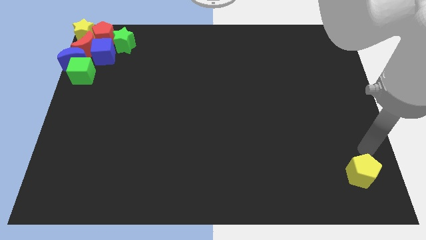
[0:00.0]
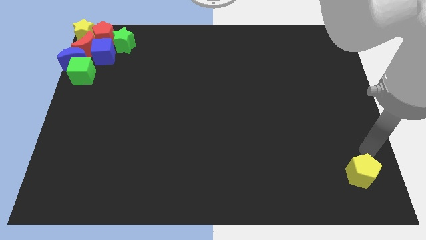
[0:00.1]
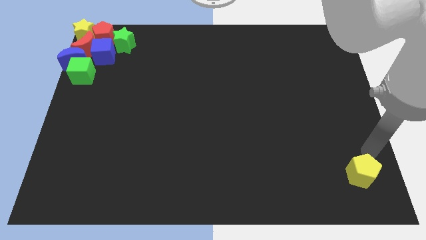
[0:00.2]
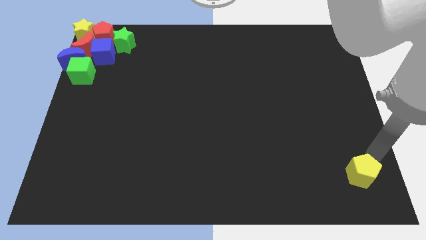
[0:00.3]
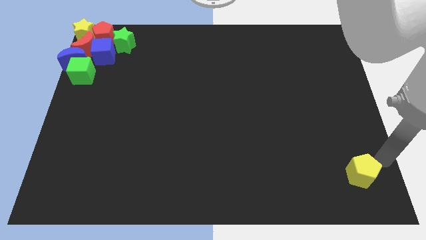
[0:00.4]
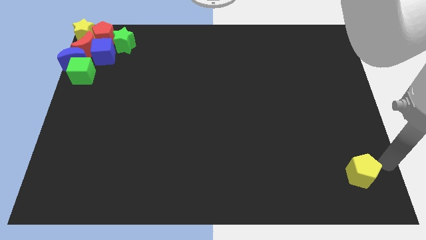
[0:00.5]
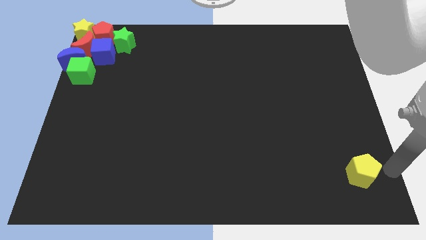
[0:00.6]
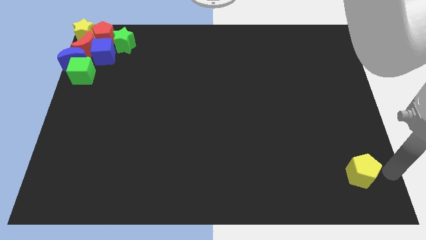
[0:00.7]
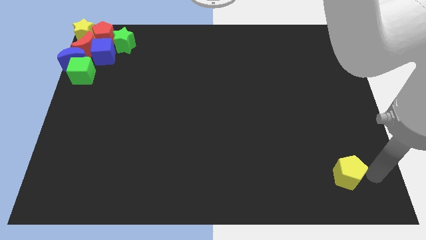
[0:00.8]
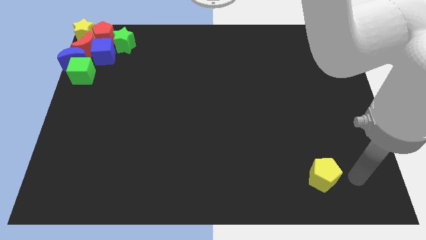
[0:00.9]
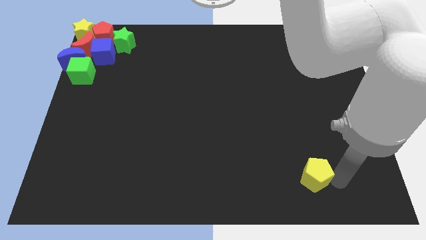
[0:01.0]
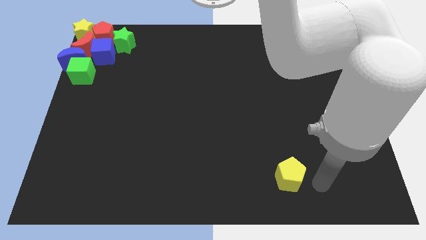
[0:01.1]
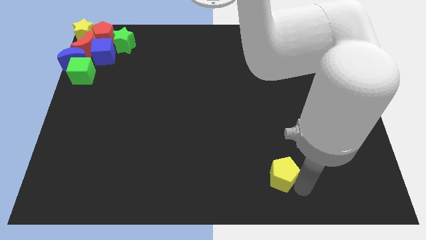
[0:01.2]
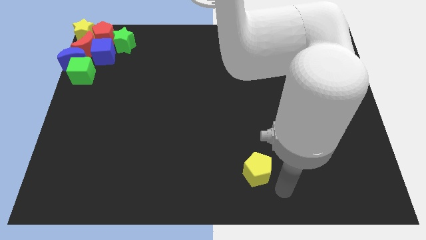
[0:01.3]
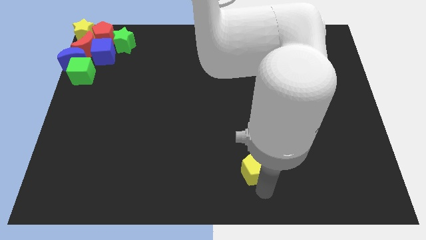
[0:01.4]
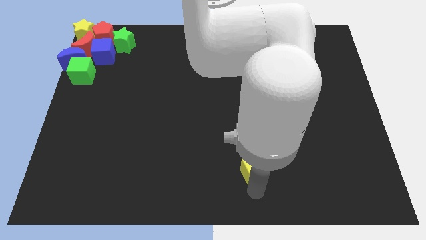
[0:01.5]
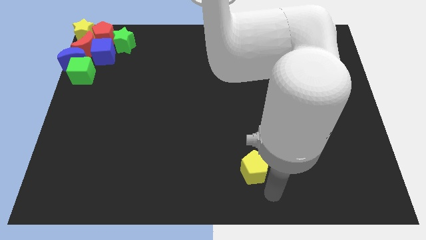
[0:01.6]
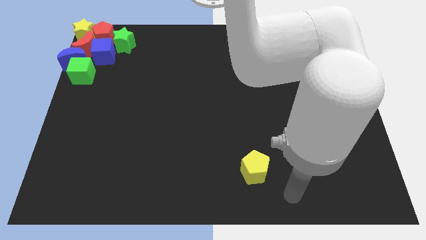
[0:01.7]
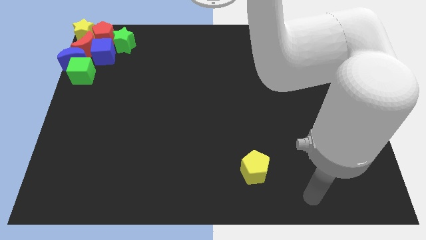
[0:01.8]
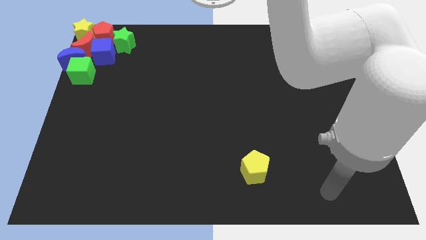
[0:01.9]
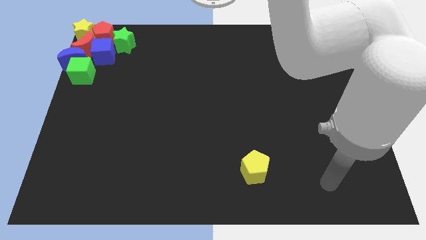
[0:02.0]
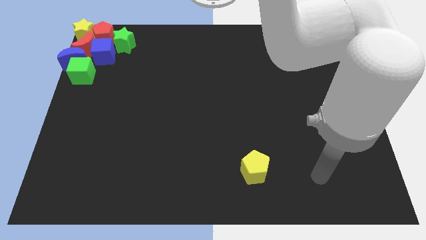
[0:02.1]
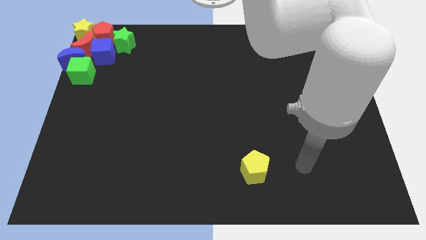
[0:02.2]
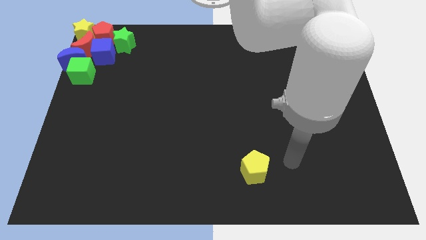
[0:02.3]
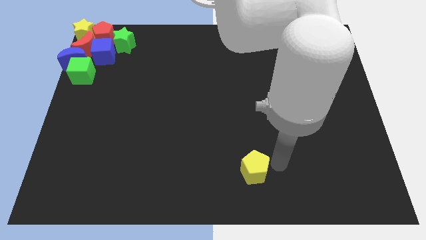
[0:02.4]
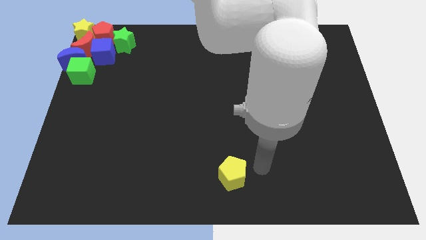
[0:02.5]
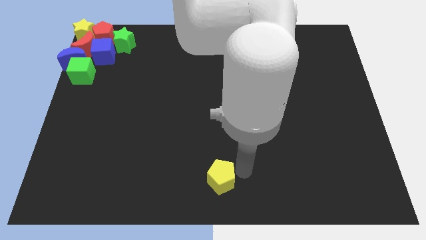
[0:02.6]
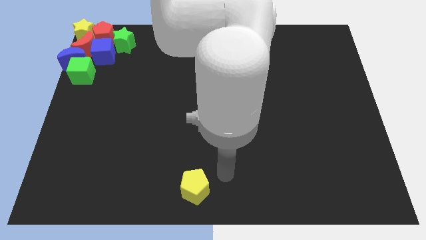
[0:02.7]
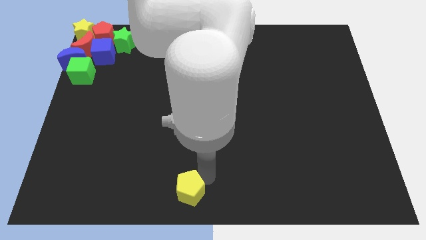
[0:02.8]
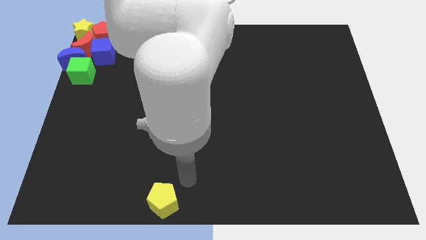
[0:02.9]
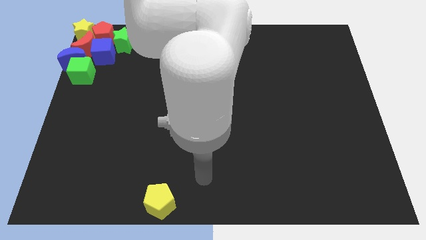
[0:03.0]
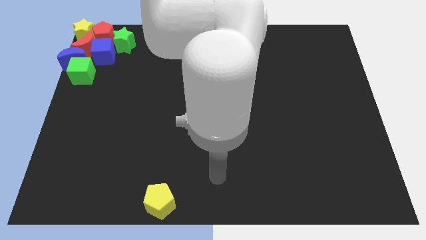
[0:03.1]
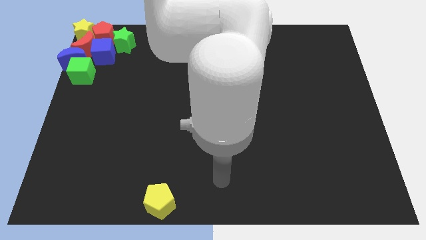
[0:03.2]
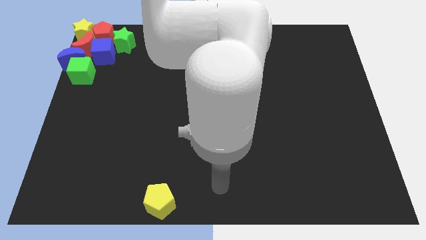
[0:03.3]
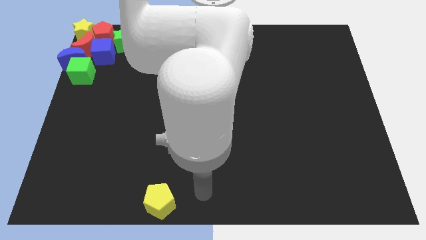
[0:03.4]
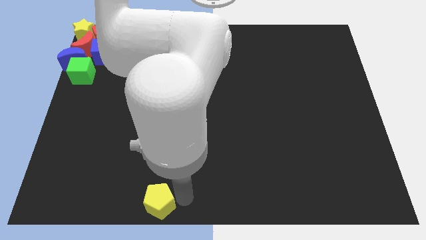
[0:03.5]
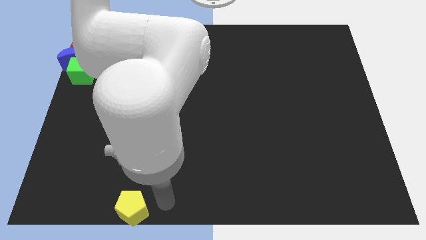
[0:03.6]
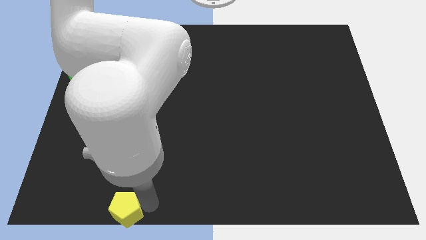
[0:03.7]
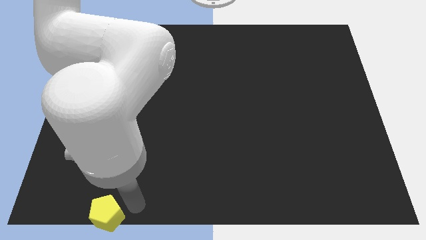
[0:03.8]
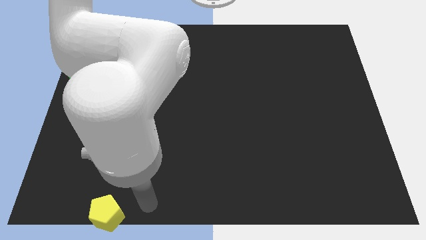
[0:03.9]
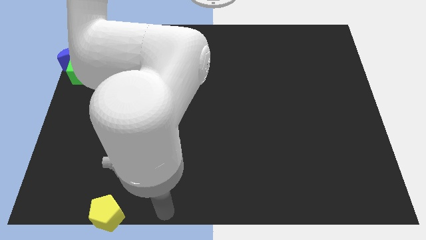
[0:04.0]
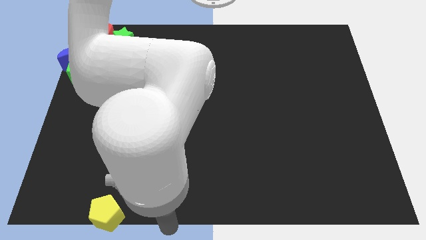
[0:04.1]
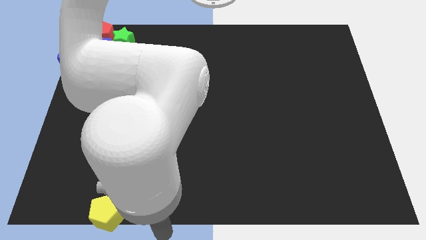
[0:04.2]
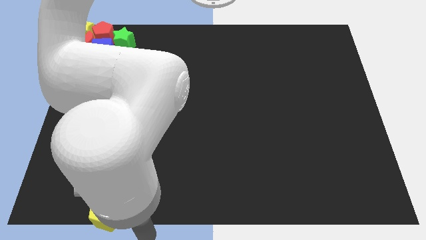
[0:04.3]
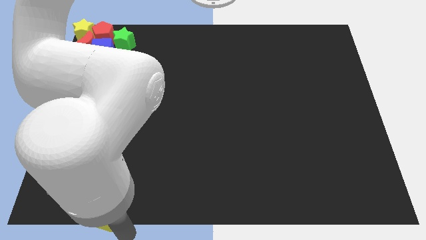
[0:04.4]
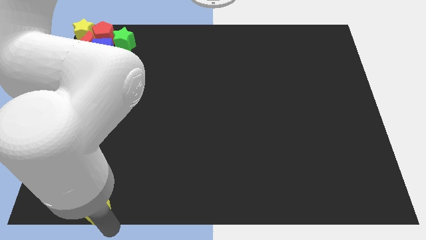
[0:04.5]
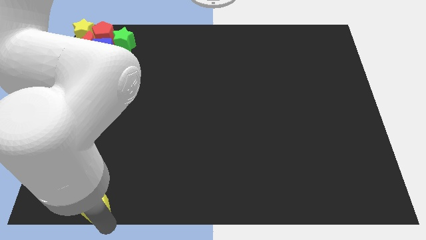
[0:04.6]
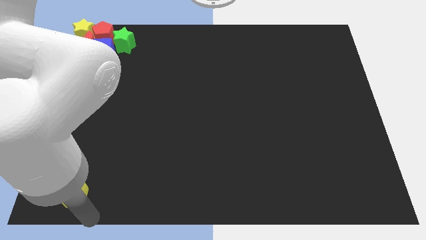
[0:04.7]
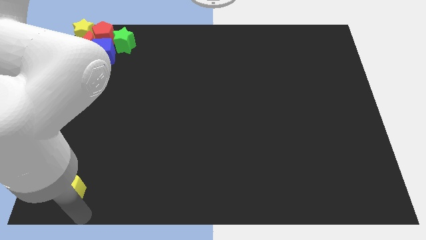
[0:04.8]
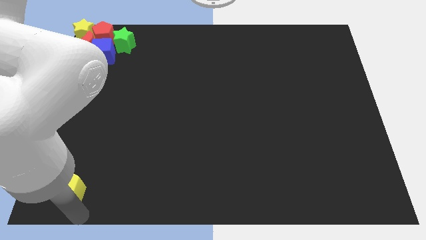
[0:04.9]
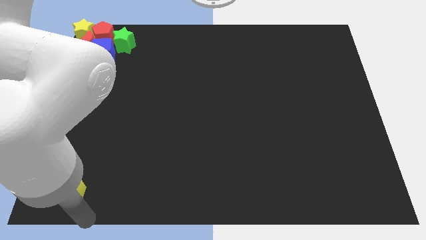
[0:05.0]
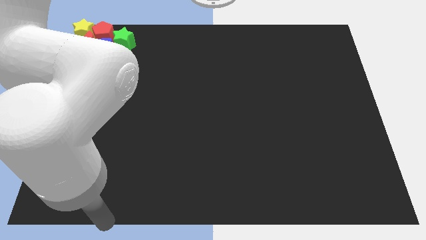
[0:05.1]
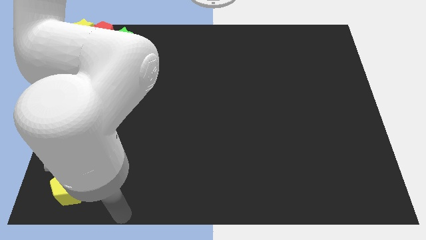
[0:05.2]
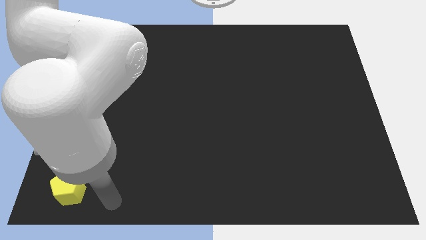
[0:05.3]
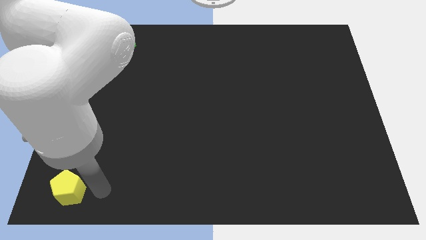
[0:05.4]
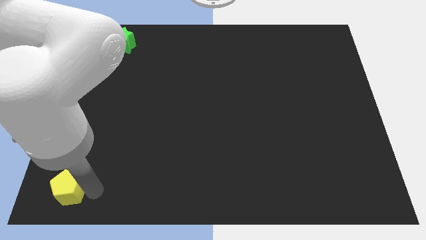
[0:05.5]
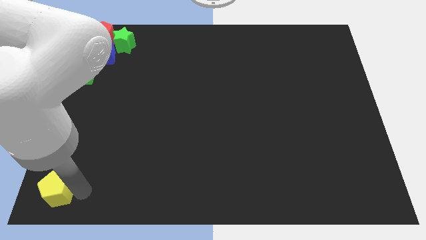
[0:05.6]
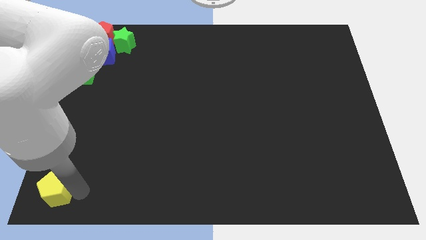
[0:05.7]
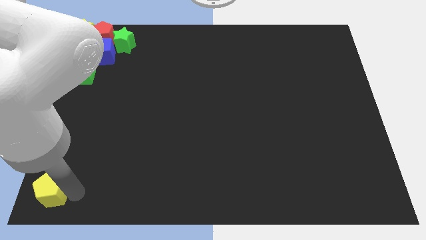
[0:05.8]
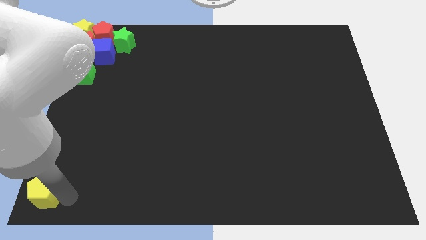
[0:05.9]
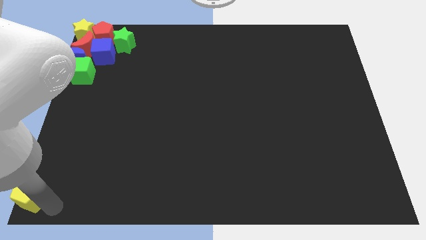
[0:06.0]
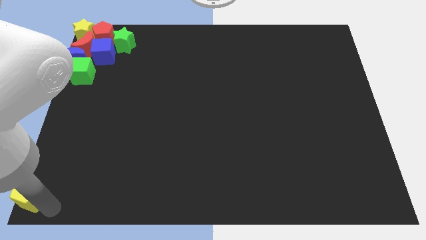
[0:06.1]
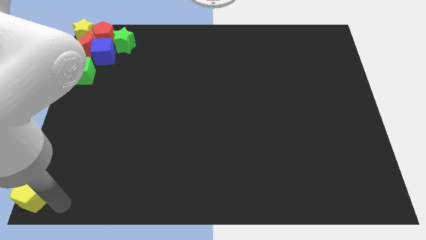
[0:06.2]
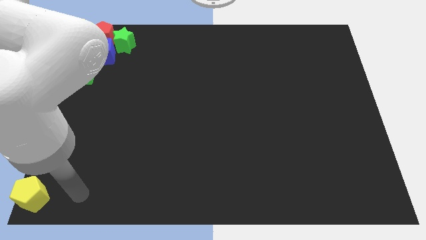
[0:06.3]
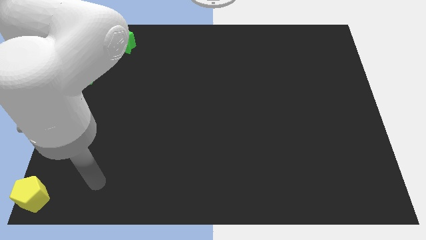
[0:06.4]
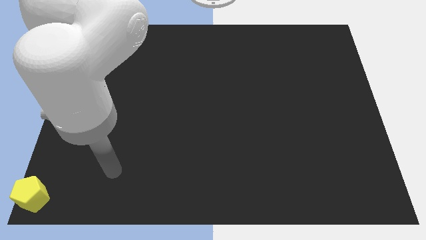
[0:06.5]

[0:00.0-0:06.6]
place the pentagon at the bottom left corner of the board

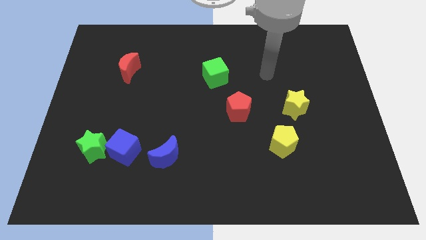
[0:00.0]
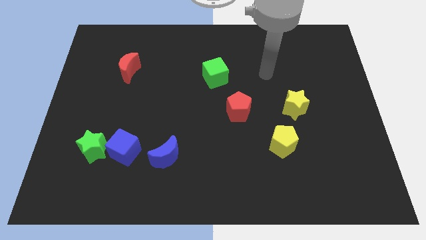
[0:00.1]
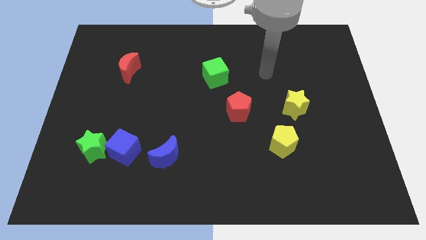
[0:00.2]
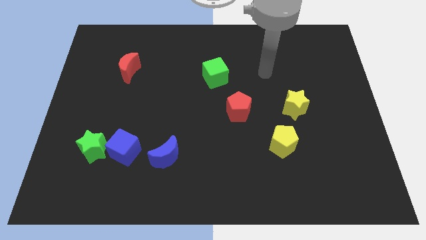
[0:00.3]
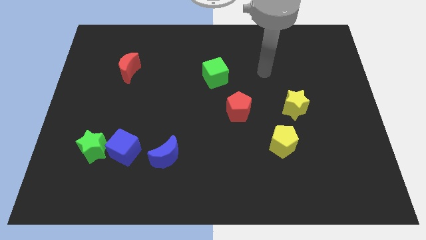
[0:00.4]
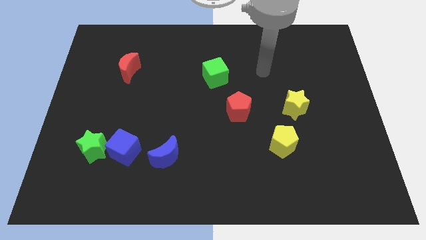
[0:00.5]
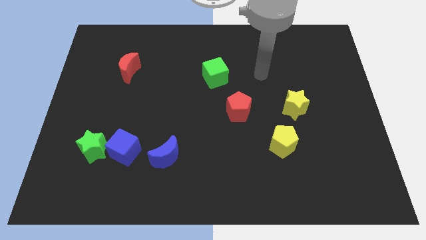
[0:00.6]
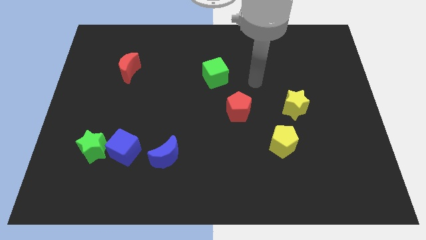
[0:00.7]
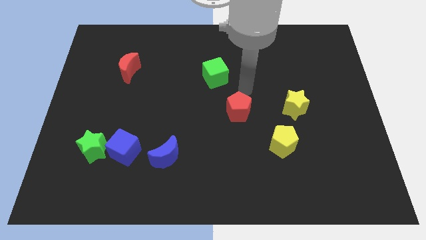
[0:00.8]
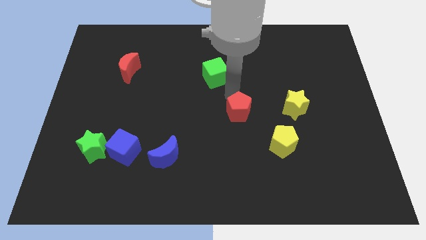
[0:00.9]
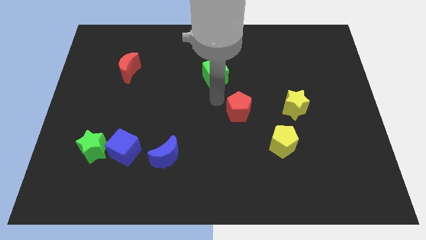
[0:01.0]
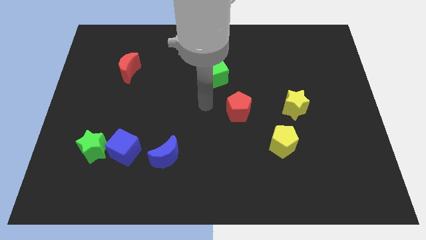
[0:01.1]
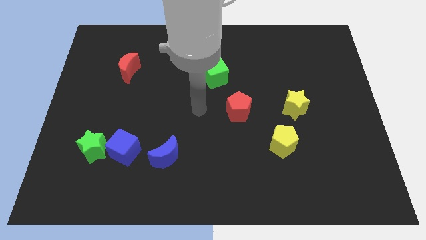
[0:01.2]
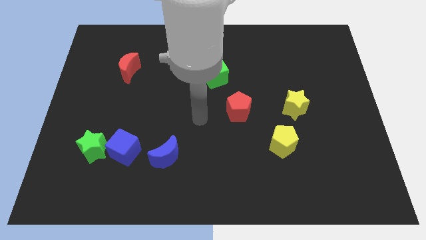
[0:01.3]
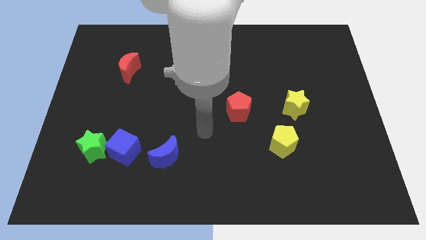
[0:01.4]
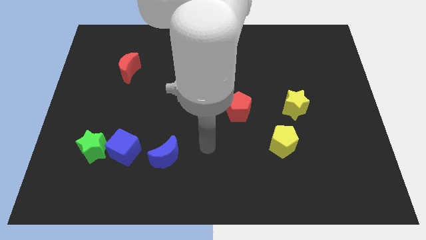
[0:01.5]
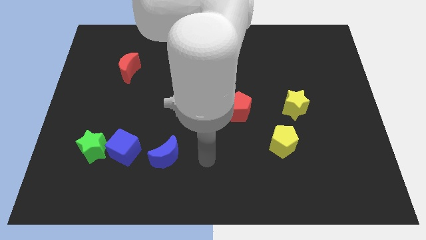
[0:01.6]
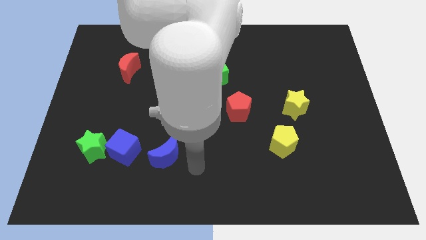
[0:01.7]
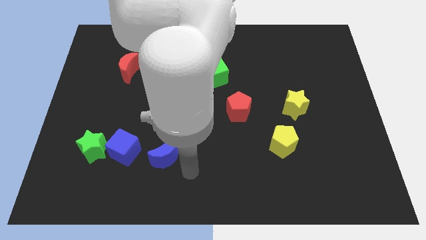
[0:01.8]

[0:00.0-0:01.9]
place the arm diagonally to the blue cube

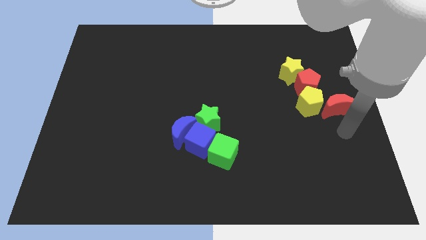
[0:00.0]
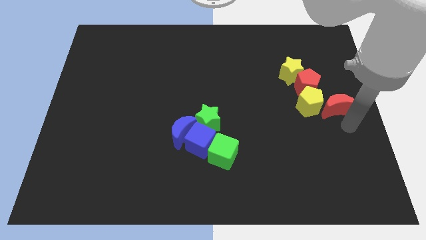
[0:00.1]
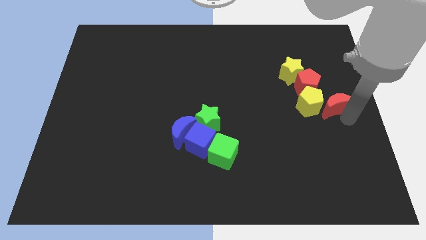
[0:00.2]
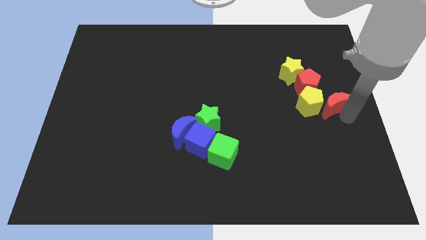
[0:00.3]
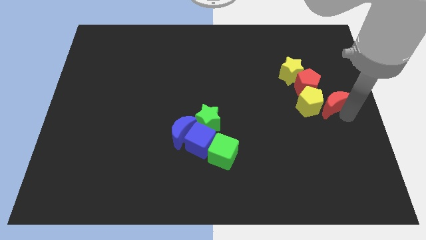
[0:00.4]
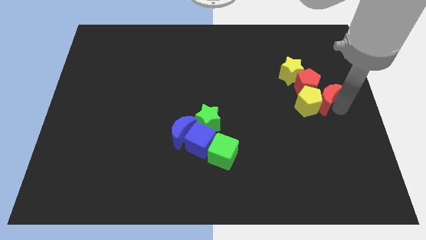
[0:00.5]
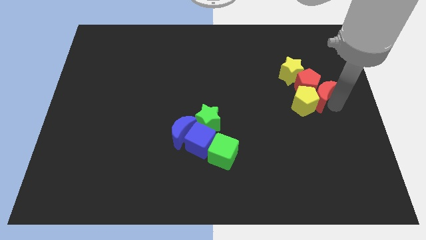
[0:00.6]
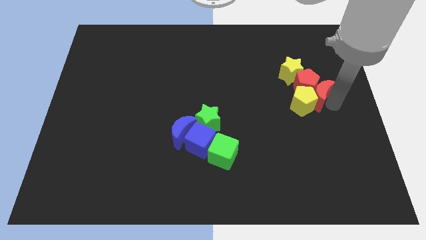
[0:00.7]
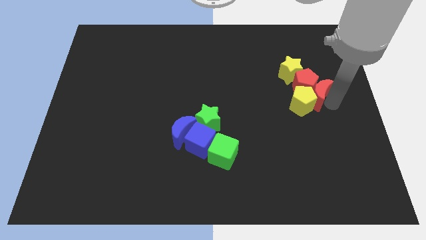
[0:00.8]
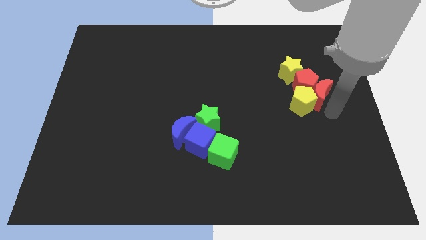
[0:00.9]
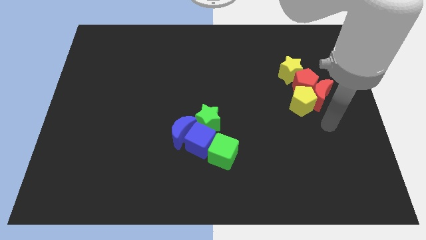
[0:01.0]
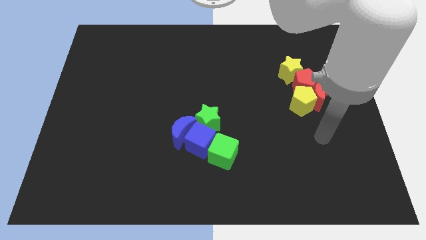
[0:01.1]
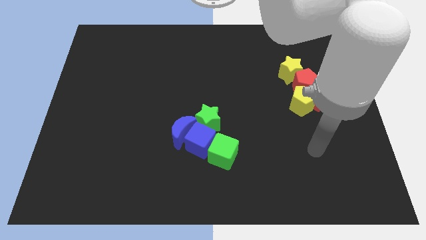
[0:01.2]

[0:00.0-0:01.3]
move the red moon close to red pentagon and yellow pentagon
